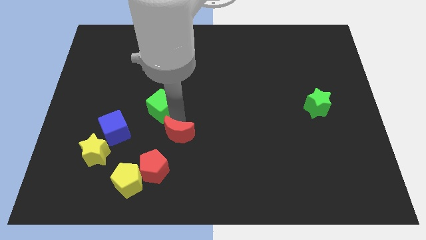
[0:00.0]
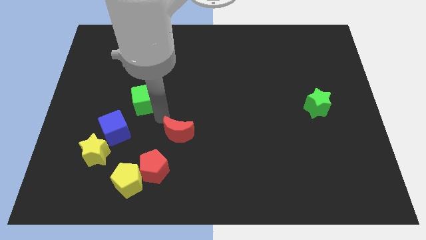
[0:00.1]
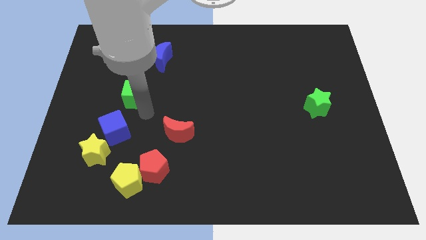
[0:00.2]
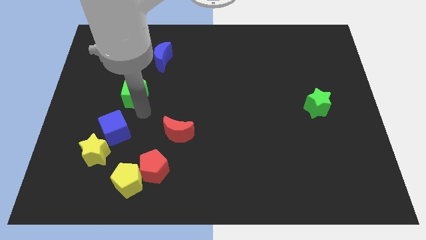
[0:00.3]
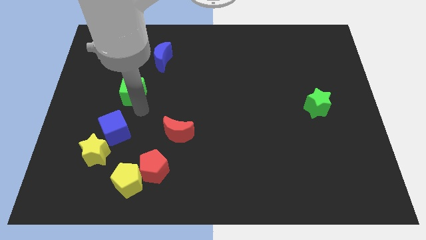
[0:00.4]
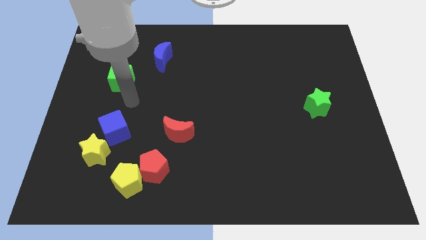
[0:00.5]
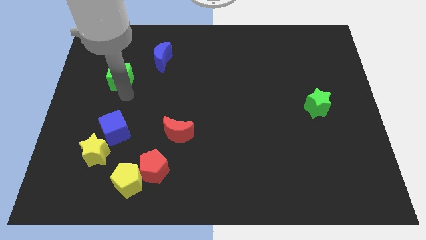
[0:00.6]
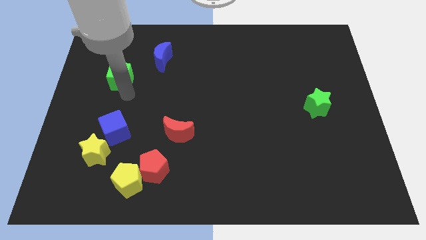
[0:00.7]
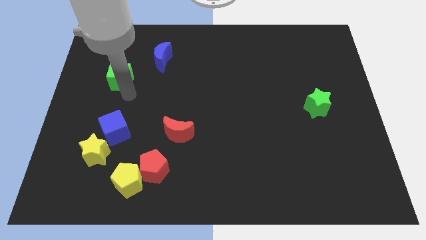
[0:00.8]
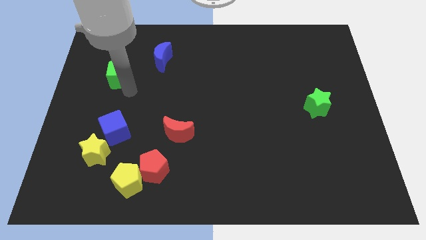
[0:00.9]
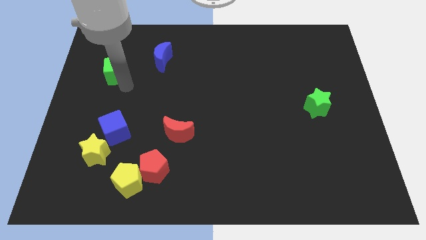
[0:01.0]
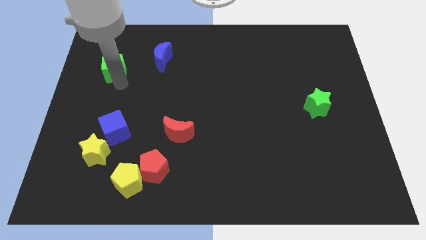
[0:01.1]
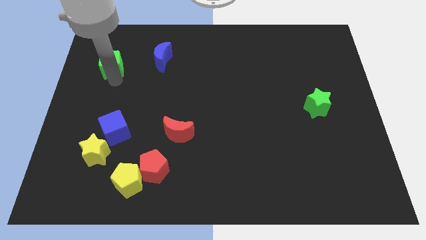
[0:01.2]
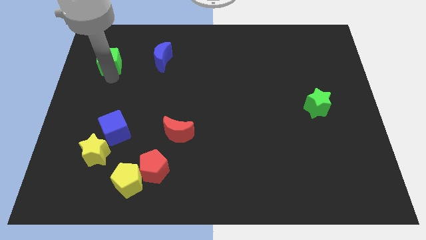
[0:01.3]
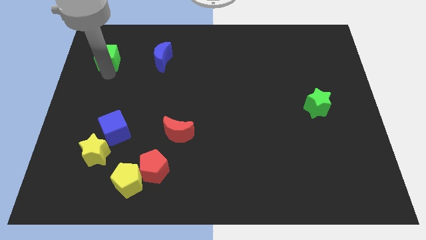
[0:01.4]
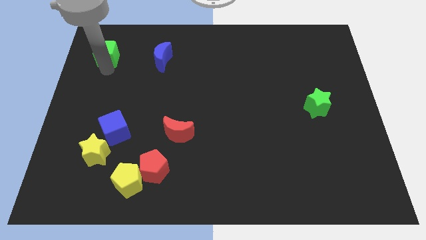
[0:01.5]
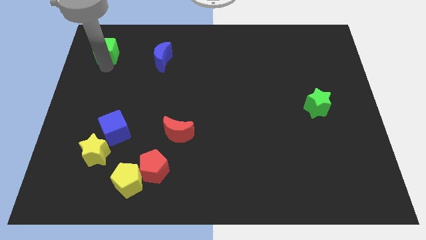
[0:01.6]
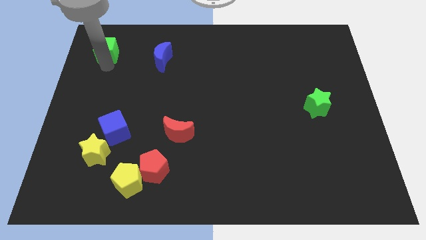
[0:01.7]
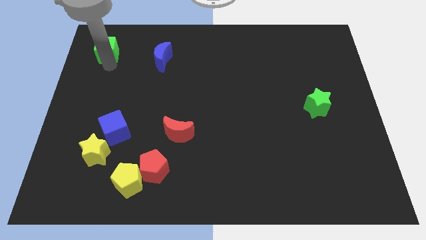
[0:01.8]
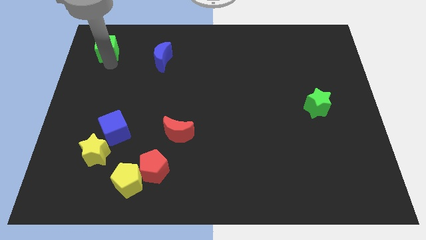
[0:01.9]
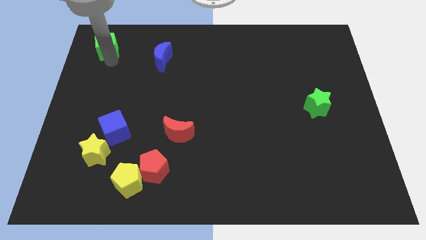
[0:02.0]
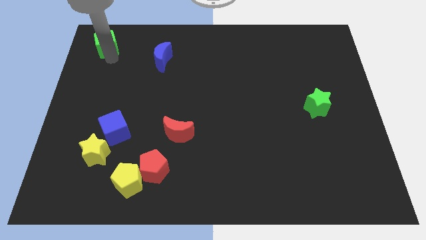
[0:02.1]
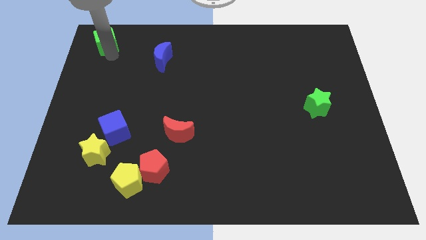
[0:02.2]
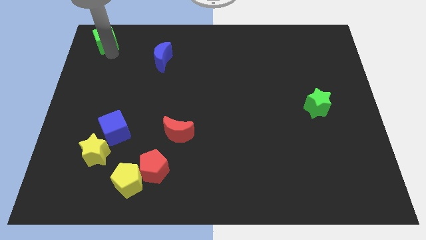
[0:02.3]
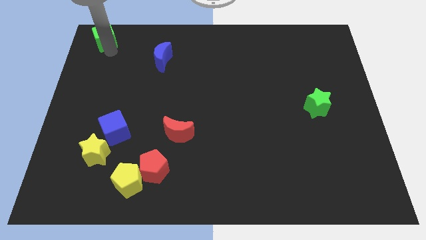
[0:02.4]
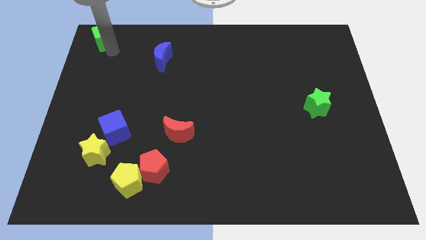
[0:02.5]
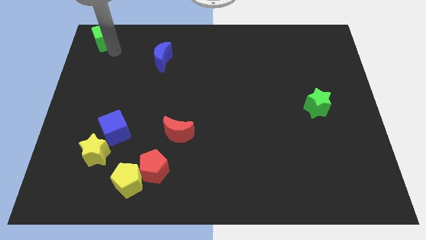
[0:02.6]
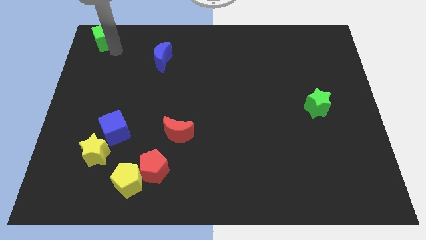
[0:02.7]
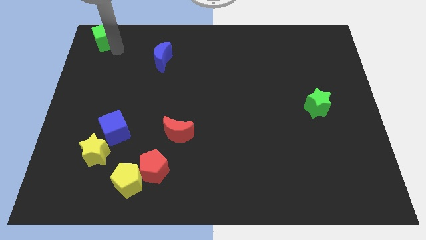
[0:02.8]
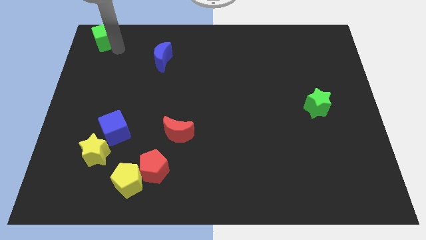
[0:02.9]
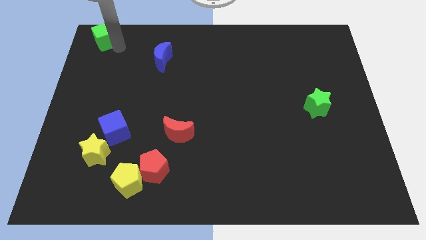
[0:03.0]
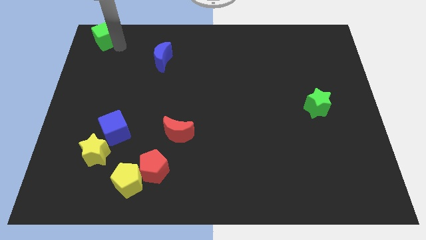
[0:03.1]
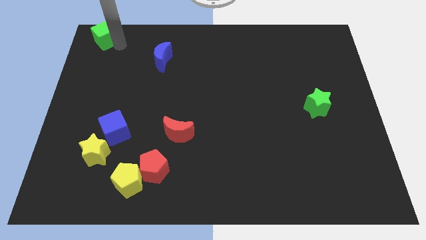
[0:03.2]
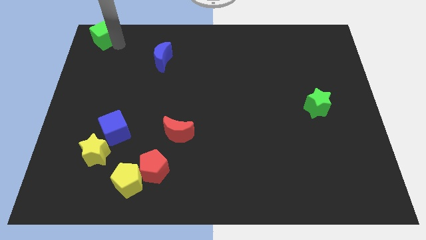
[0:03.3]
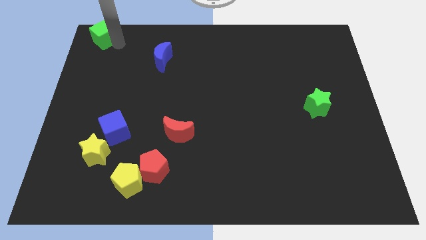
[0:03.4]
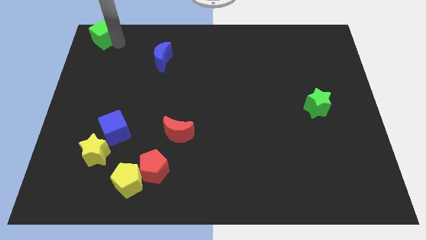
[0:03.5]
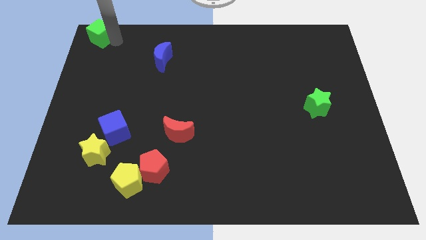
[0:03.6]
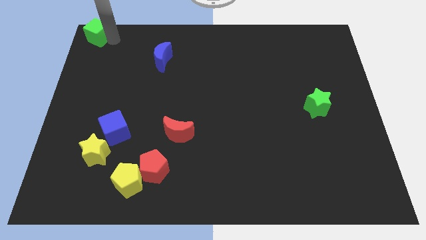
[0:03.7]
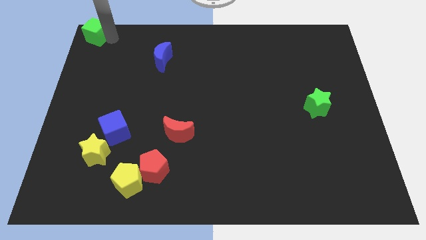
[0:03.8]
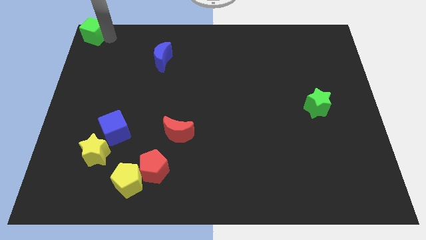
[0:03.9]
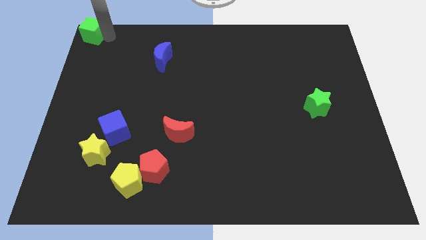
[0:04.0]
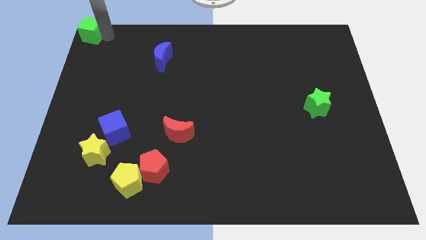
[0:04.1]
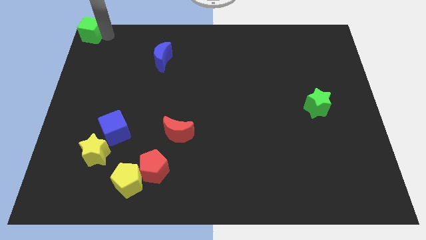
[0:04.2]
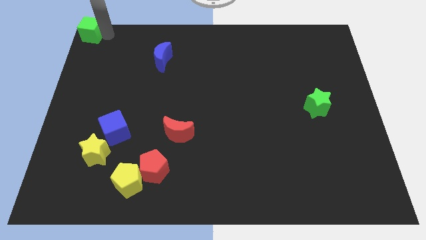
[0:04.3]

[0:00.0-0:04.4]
move the green cube to the top left corner of the board

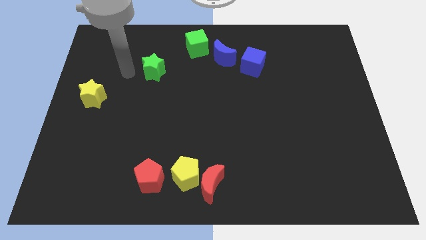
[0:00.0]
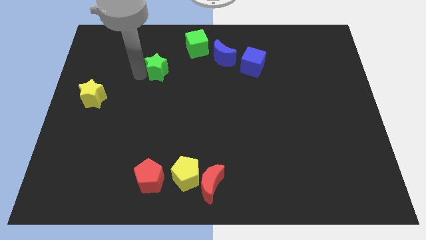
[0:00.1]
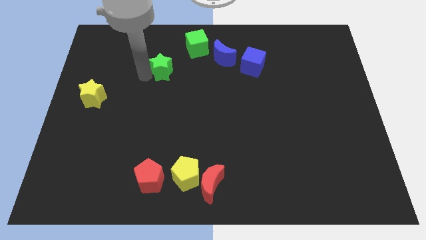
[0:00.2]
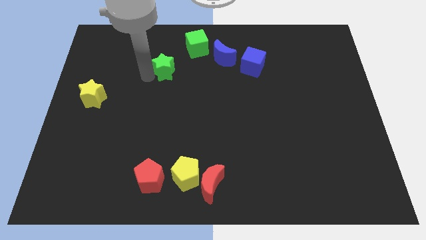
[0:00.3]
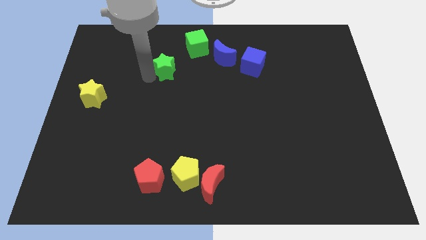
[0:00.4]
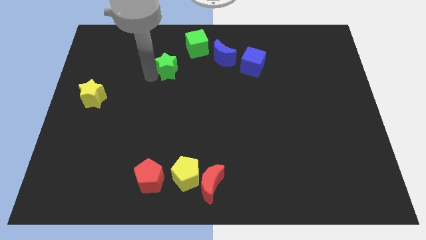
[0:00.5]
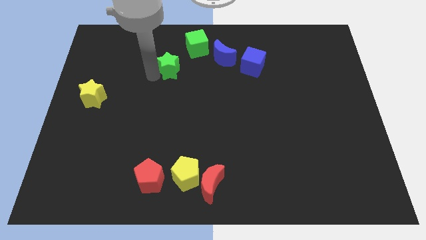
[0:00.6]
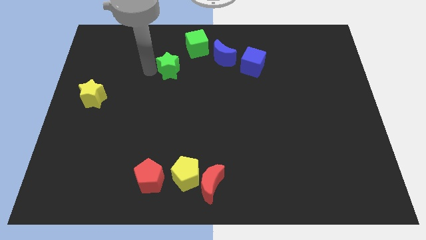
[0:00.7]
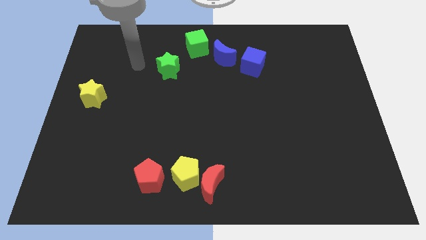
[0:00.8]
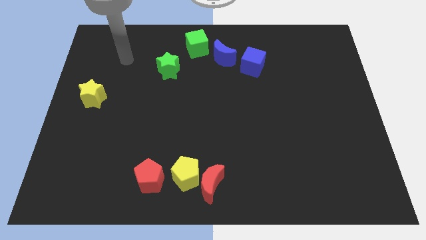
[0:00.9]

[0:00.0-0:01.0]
push the green star towards the diagonal bottom left corner of the green cube

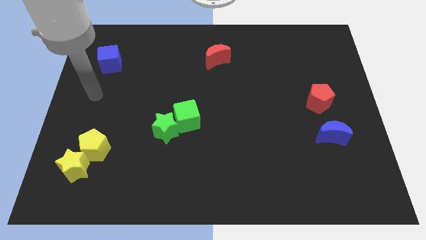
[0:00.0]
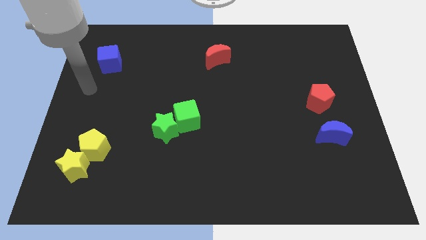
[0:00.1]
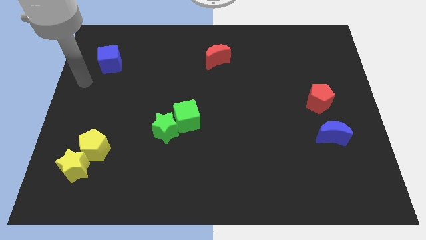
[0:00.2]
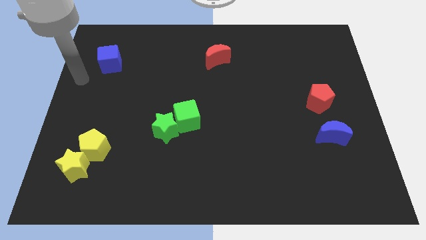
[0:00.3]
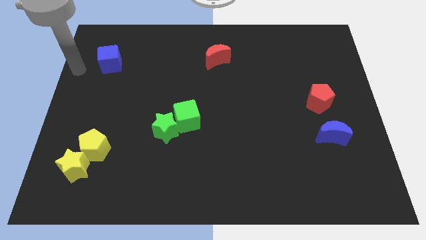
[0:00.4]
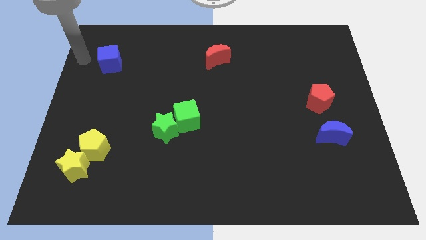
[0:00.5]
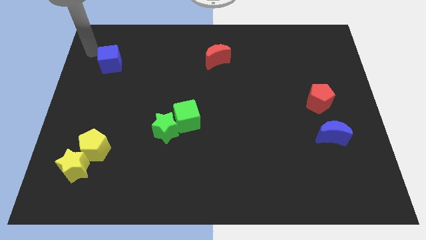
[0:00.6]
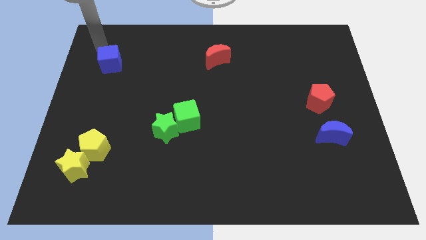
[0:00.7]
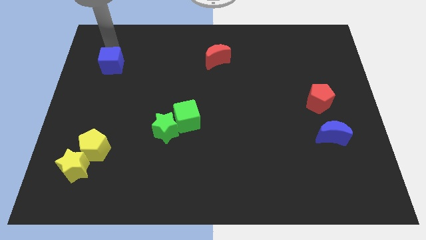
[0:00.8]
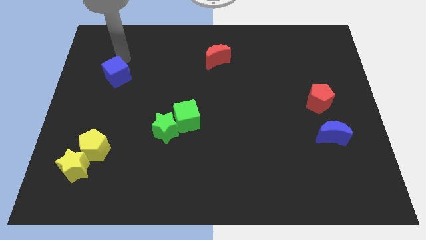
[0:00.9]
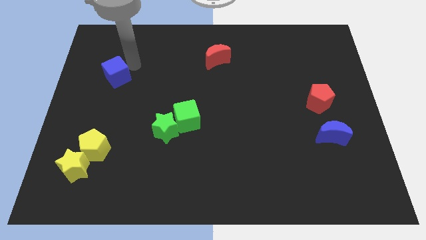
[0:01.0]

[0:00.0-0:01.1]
tap your arm on right side of blue cube

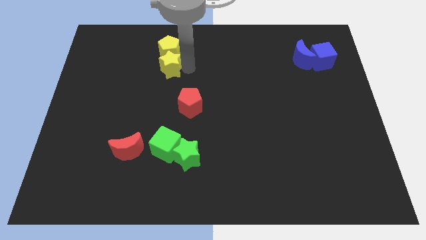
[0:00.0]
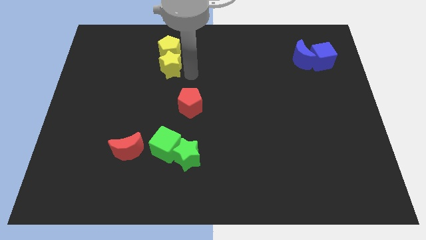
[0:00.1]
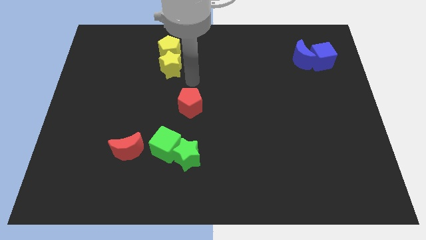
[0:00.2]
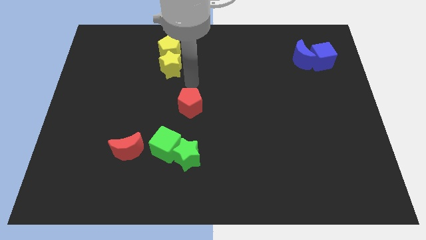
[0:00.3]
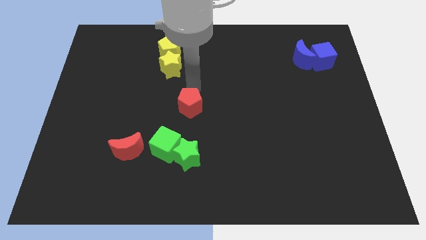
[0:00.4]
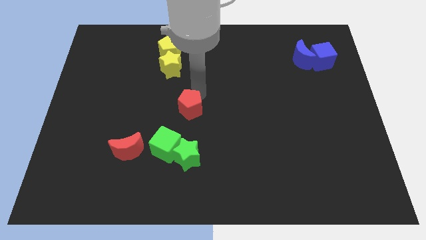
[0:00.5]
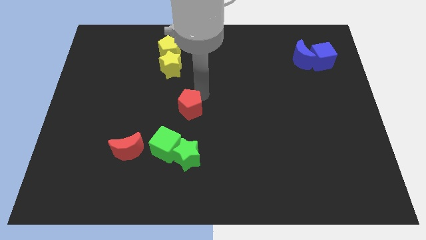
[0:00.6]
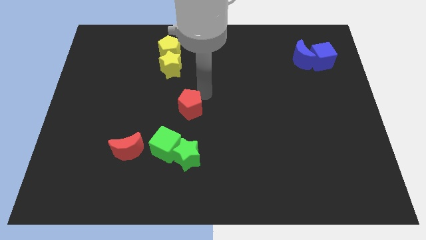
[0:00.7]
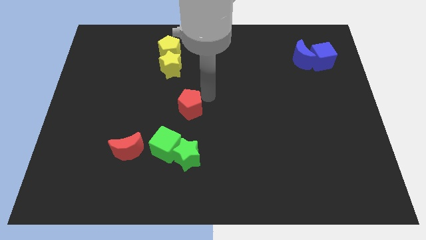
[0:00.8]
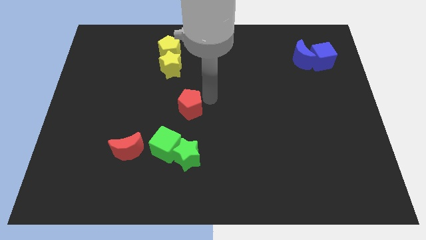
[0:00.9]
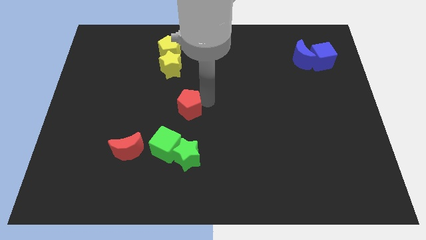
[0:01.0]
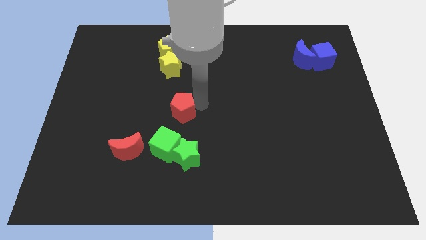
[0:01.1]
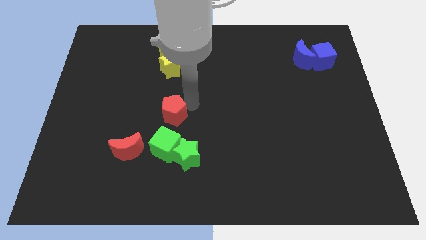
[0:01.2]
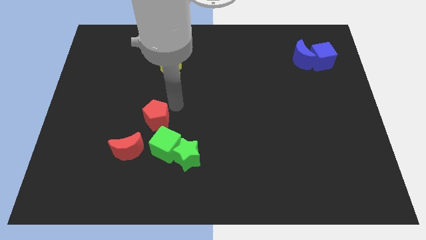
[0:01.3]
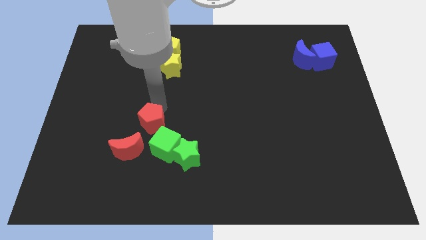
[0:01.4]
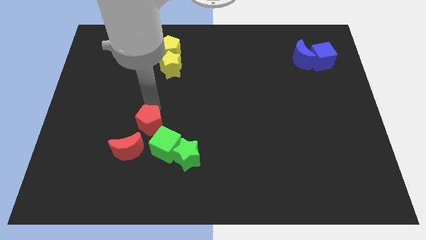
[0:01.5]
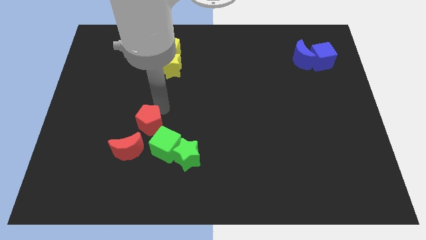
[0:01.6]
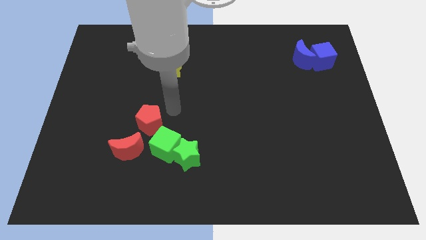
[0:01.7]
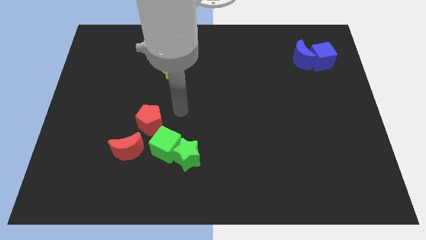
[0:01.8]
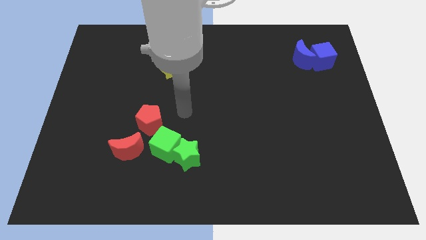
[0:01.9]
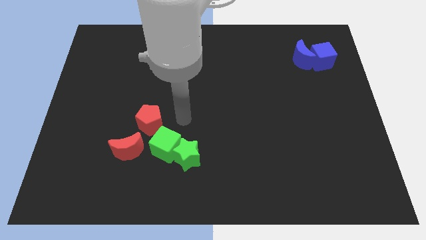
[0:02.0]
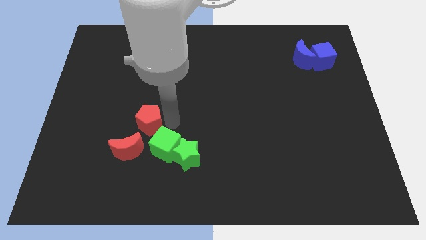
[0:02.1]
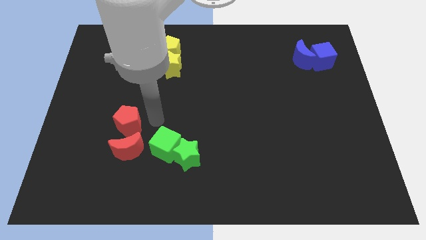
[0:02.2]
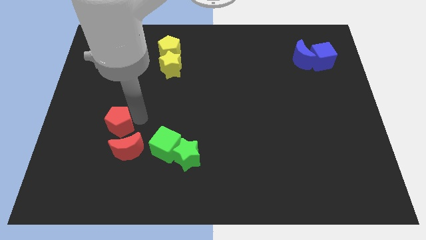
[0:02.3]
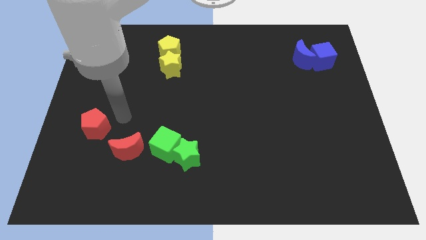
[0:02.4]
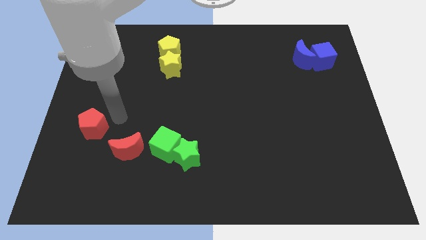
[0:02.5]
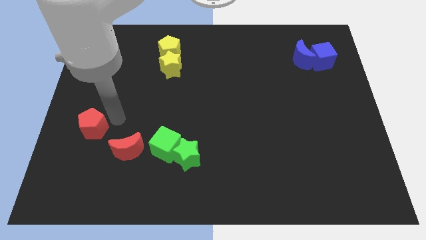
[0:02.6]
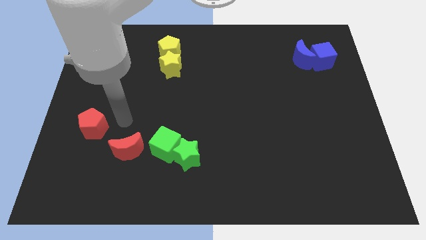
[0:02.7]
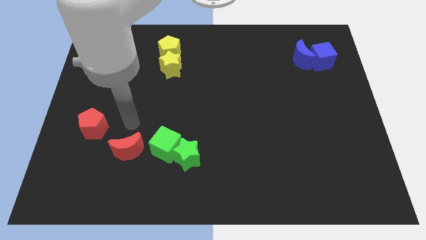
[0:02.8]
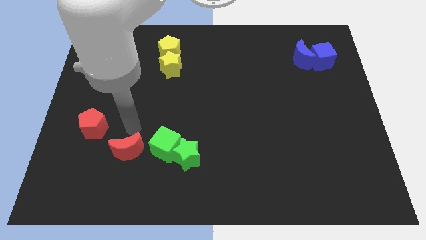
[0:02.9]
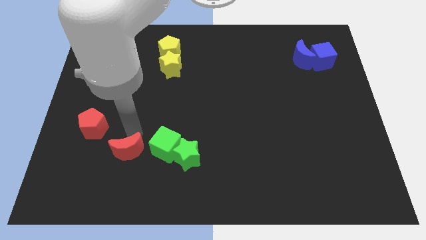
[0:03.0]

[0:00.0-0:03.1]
move the red pentagon diagonally to the top left of red crescent
